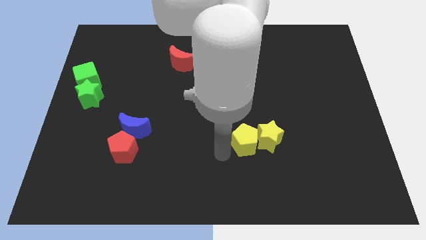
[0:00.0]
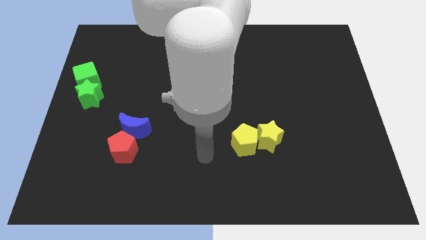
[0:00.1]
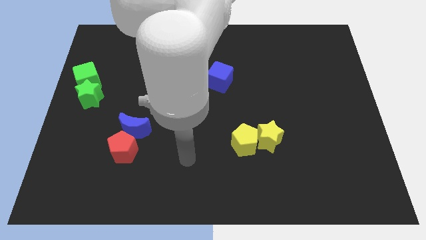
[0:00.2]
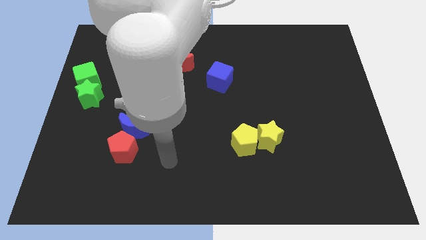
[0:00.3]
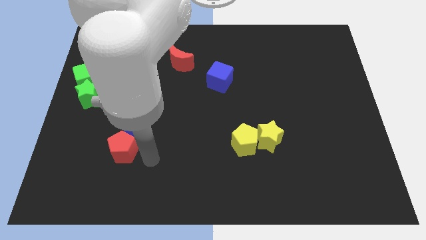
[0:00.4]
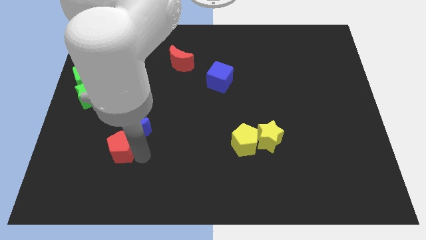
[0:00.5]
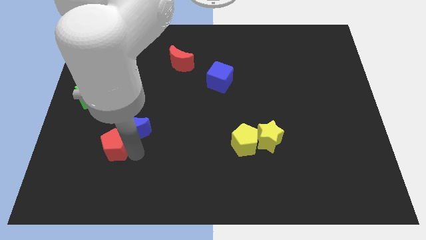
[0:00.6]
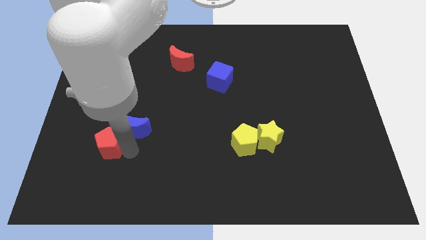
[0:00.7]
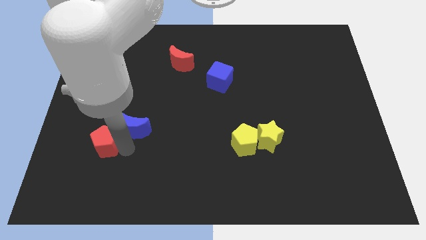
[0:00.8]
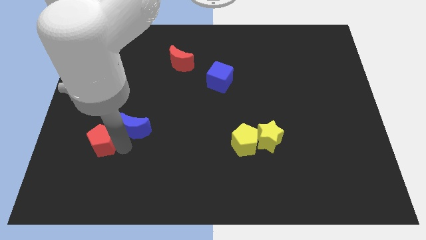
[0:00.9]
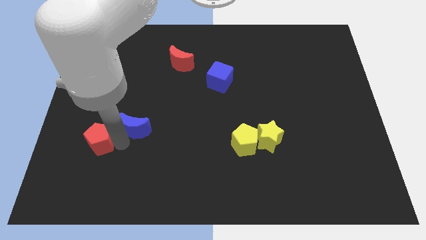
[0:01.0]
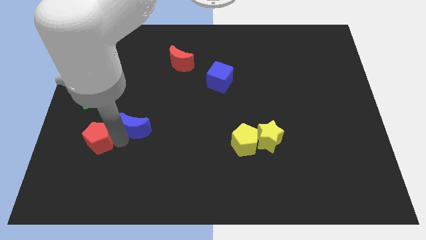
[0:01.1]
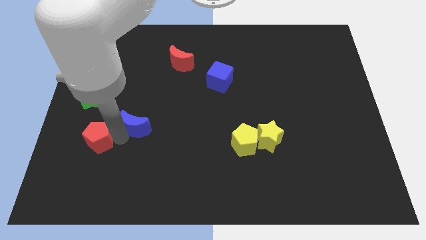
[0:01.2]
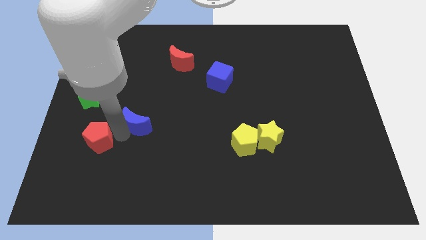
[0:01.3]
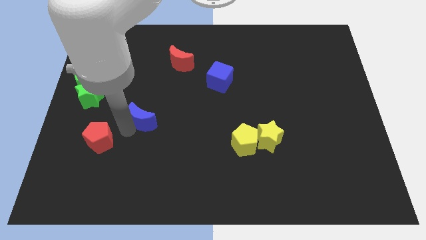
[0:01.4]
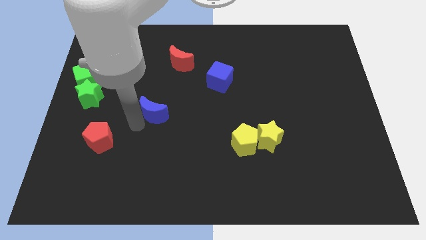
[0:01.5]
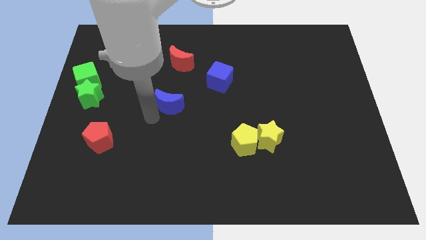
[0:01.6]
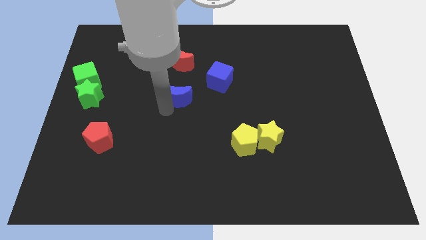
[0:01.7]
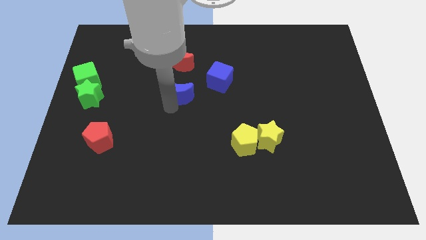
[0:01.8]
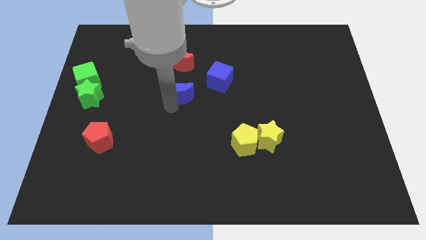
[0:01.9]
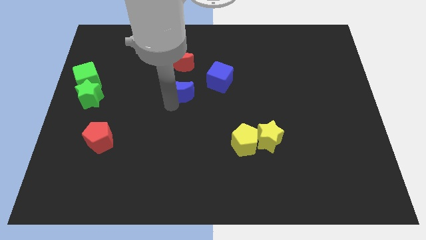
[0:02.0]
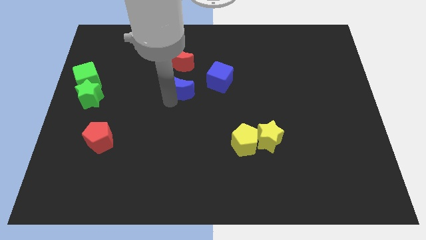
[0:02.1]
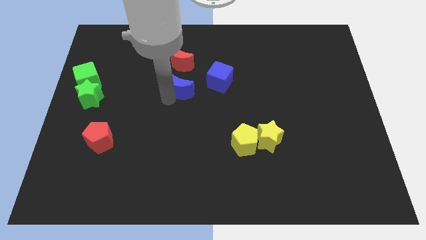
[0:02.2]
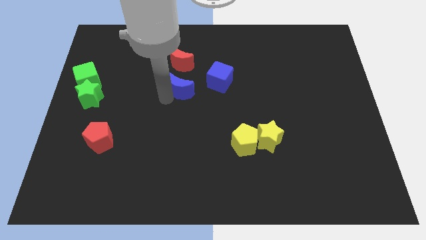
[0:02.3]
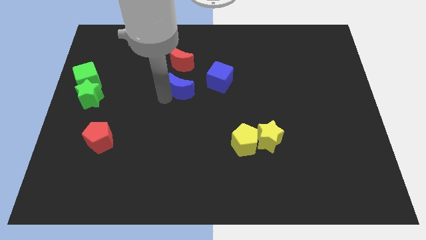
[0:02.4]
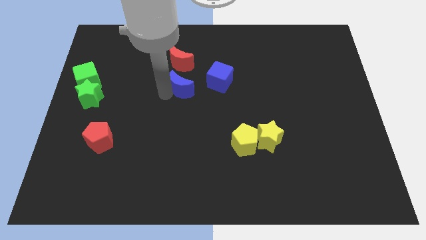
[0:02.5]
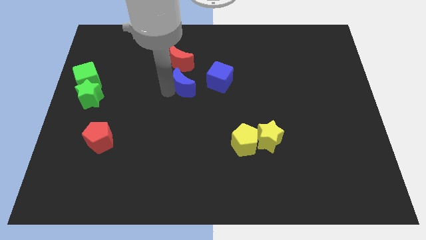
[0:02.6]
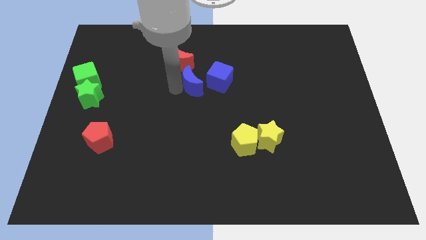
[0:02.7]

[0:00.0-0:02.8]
separate the blue moon from the red pentagon

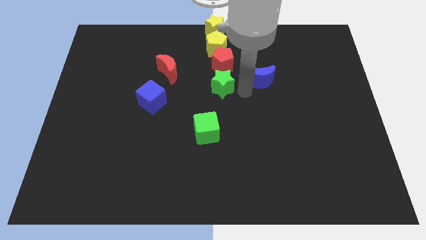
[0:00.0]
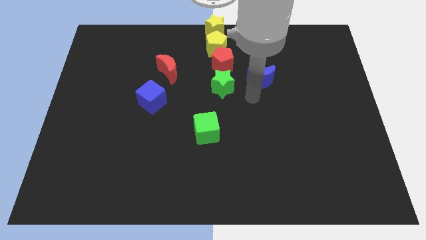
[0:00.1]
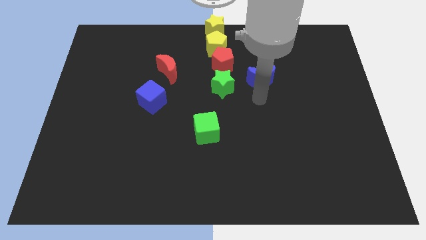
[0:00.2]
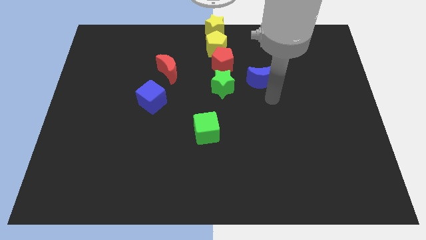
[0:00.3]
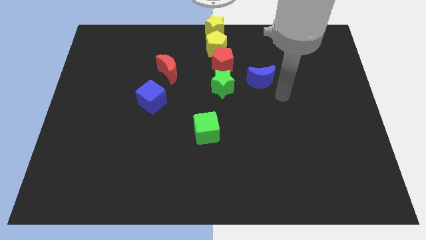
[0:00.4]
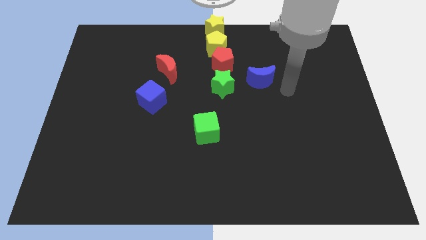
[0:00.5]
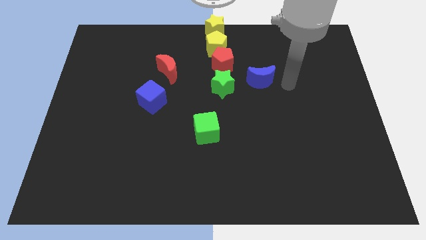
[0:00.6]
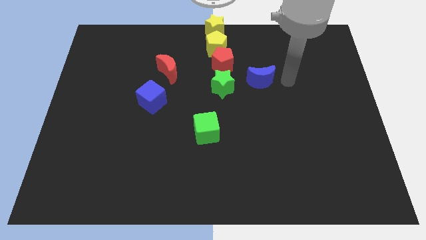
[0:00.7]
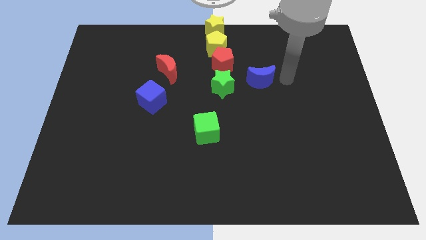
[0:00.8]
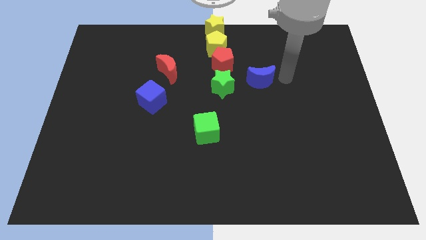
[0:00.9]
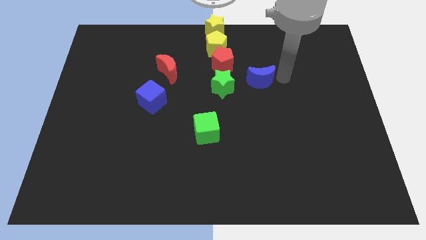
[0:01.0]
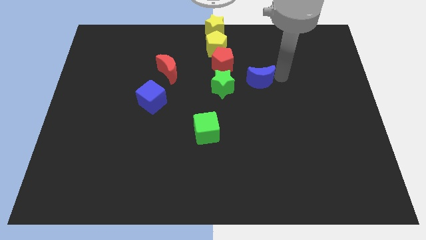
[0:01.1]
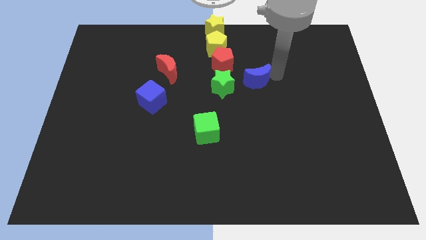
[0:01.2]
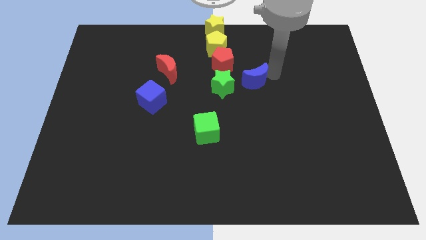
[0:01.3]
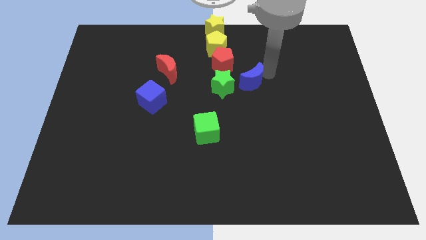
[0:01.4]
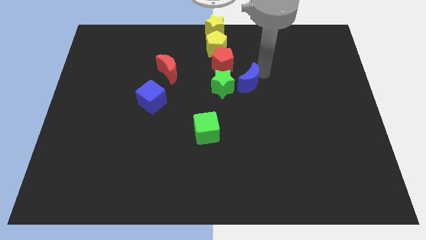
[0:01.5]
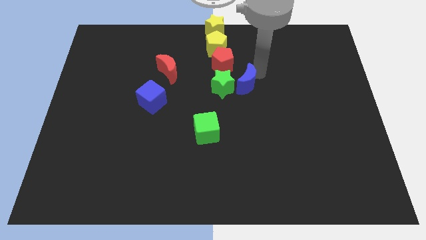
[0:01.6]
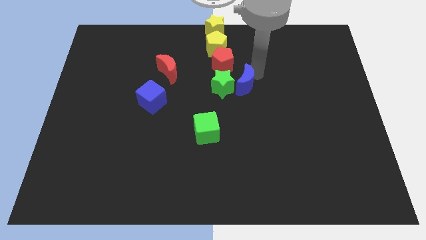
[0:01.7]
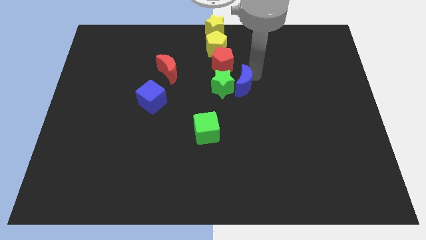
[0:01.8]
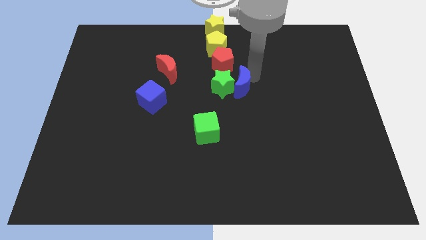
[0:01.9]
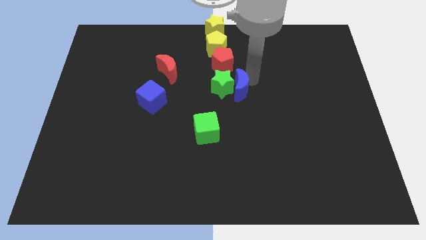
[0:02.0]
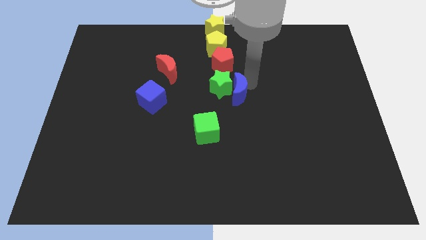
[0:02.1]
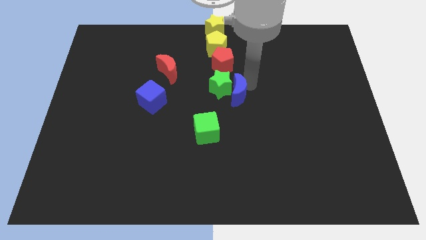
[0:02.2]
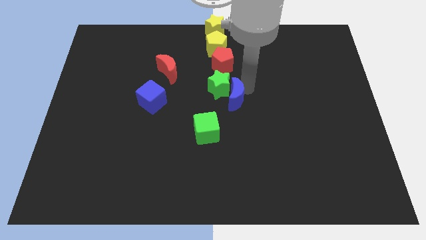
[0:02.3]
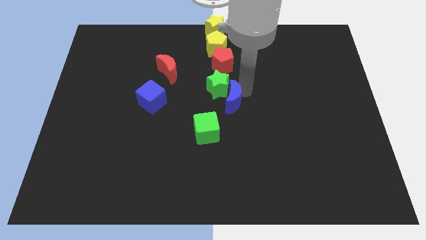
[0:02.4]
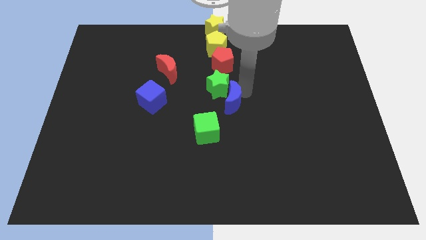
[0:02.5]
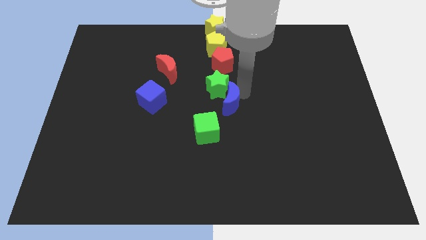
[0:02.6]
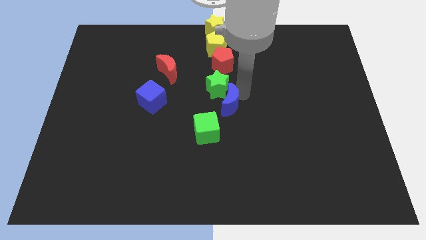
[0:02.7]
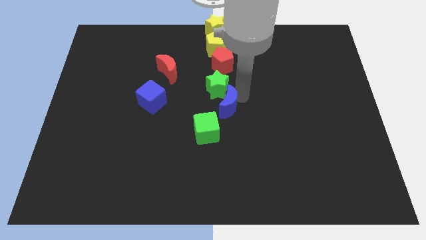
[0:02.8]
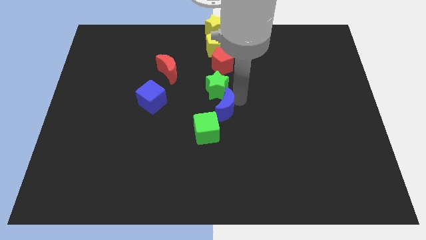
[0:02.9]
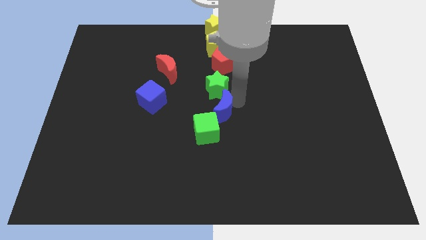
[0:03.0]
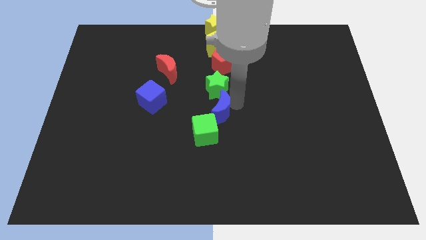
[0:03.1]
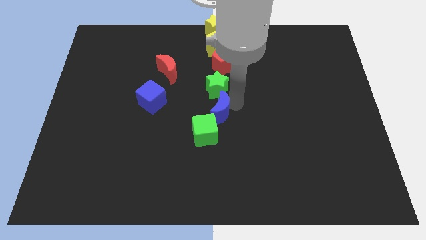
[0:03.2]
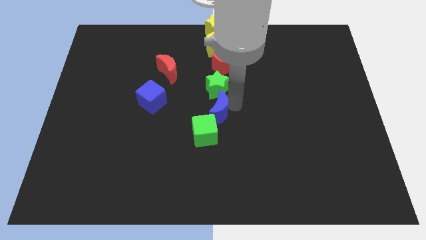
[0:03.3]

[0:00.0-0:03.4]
push blue crescent below green star

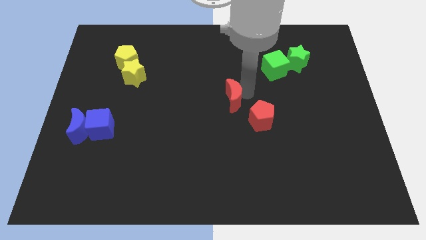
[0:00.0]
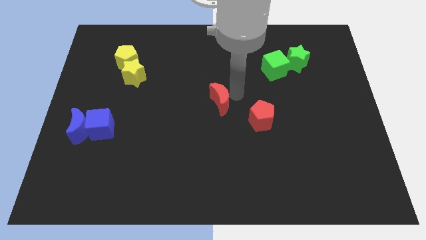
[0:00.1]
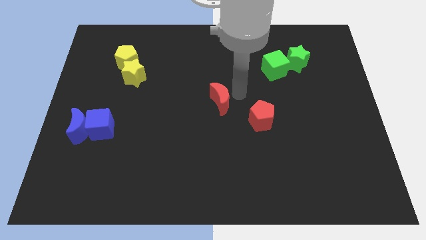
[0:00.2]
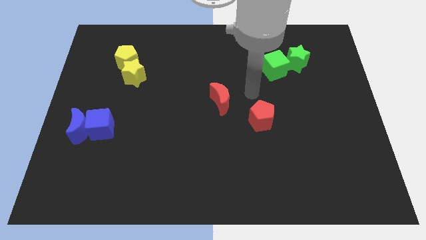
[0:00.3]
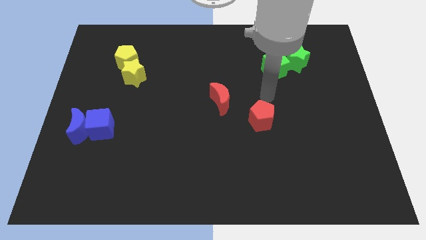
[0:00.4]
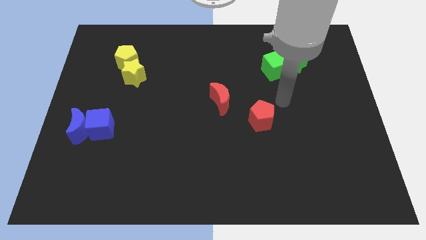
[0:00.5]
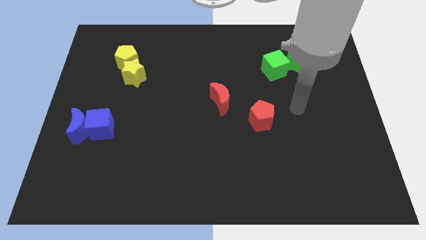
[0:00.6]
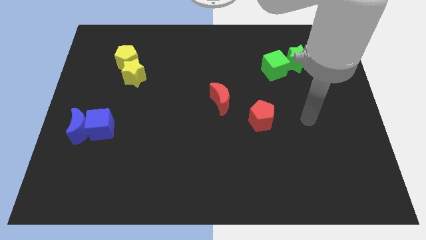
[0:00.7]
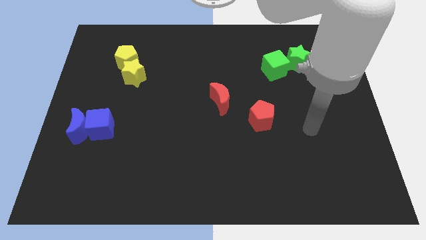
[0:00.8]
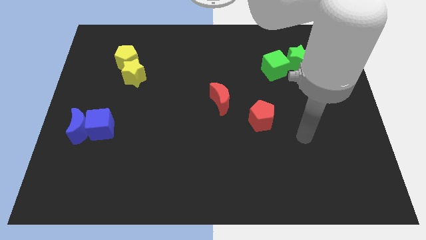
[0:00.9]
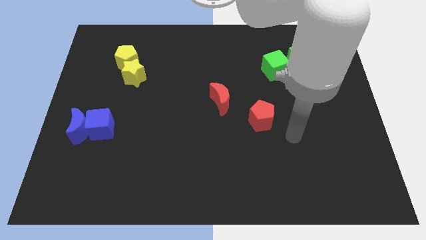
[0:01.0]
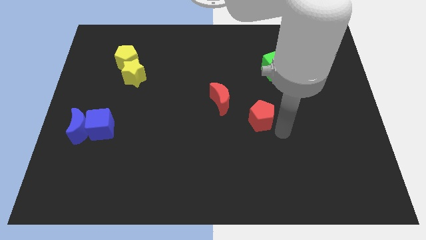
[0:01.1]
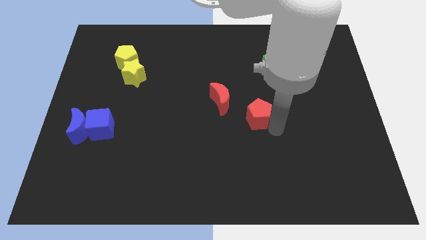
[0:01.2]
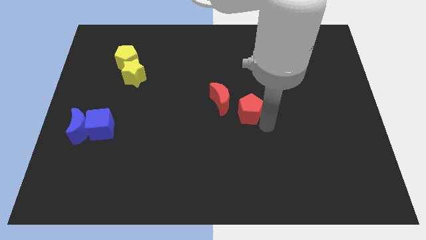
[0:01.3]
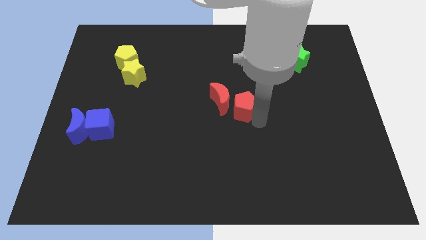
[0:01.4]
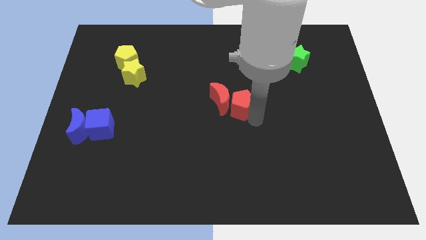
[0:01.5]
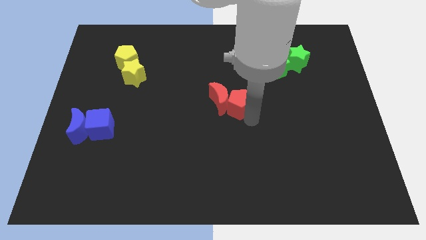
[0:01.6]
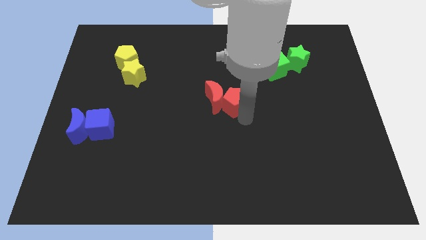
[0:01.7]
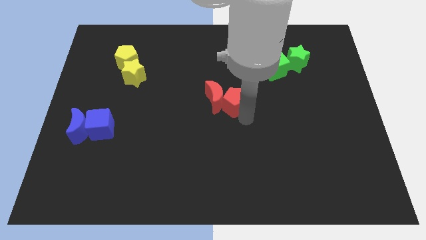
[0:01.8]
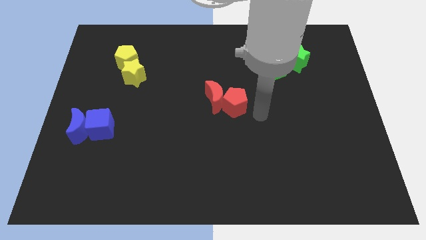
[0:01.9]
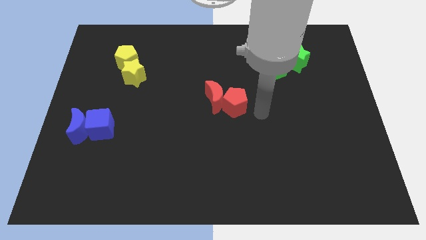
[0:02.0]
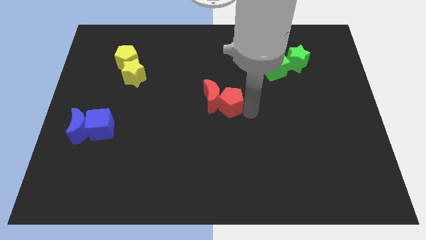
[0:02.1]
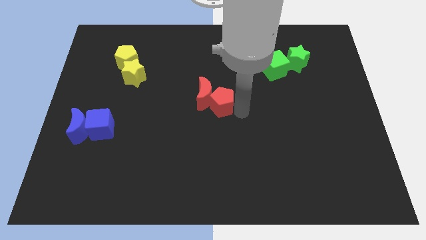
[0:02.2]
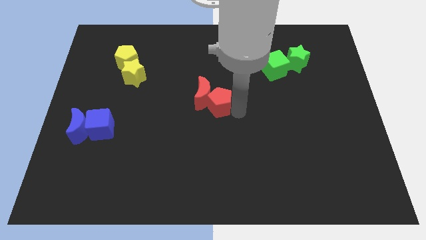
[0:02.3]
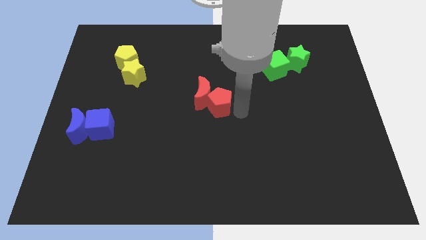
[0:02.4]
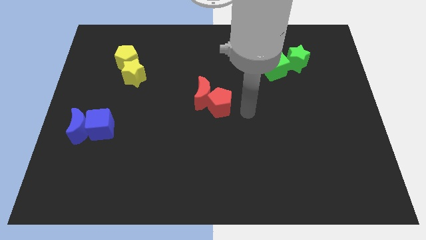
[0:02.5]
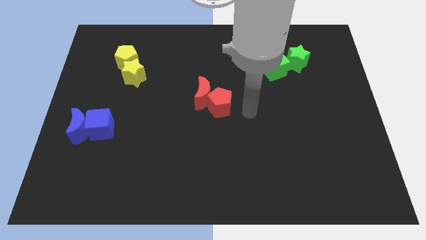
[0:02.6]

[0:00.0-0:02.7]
place the red blocks at the center of the board

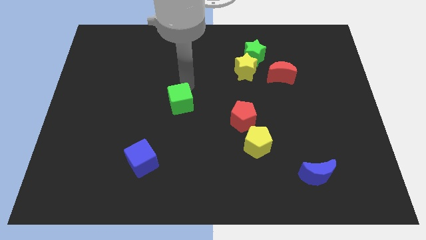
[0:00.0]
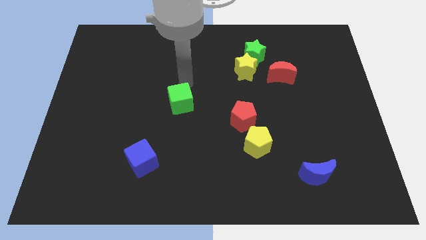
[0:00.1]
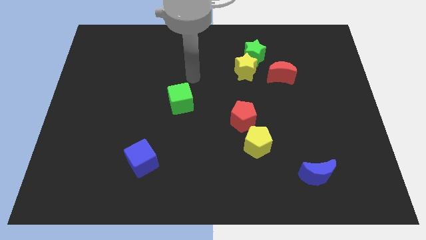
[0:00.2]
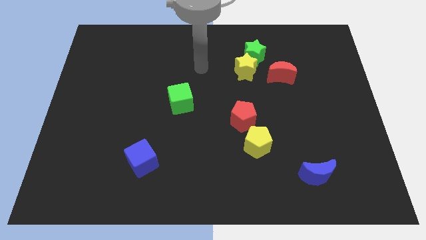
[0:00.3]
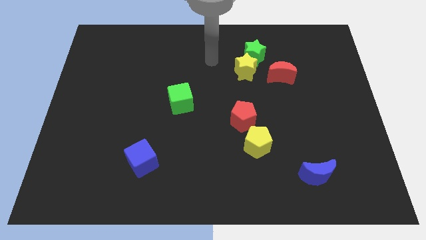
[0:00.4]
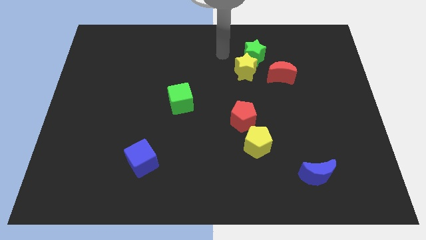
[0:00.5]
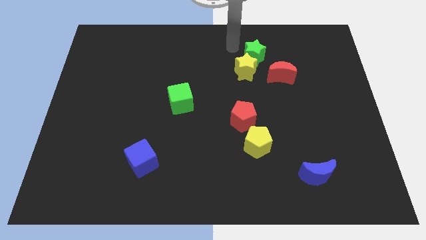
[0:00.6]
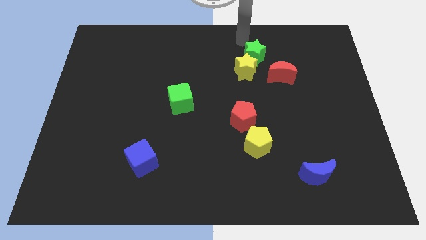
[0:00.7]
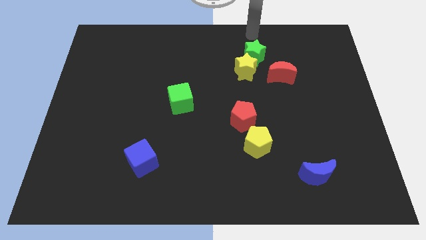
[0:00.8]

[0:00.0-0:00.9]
move your to the top of the green star
